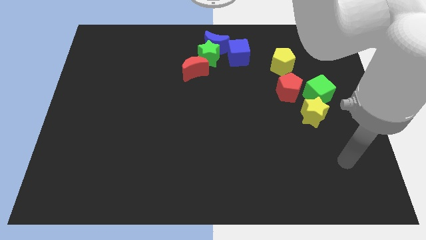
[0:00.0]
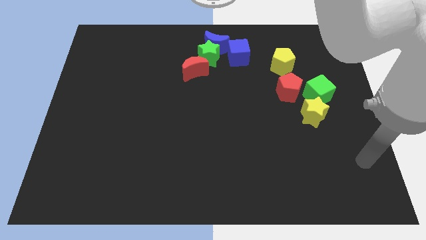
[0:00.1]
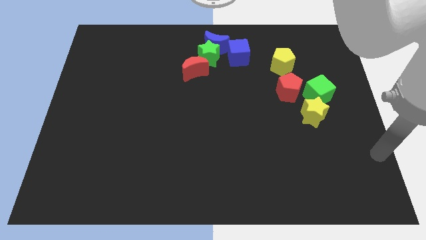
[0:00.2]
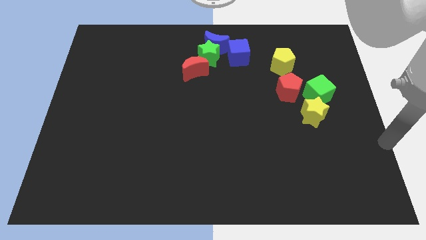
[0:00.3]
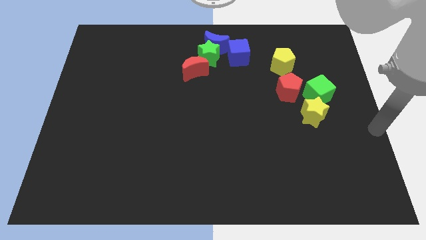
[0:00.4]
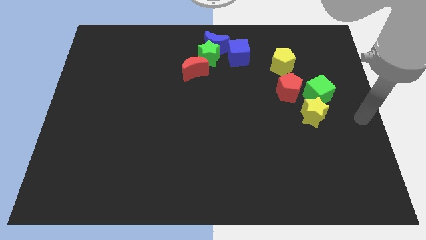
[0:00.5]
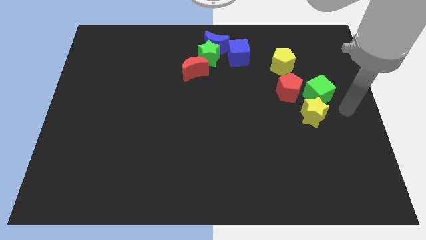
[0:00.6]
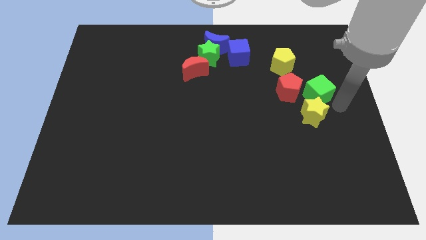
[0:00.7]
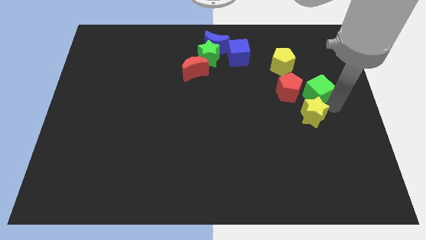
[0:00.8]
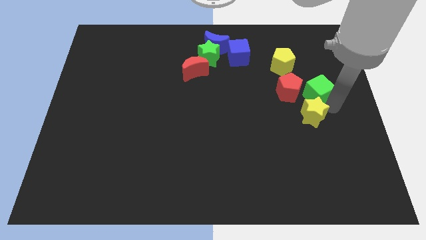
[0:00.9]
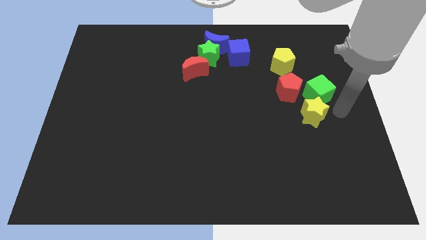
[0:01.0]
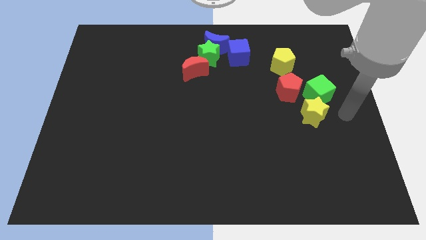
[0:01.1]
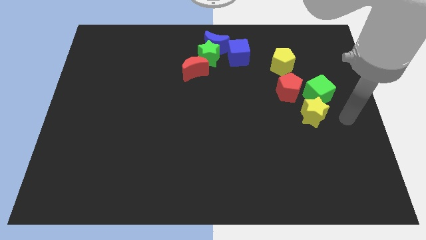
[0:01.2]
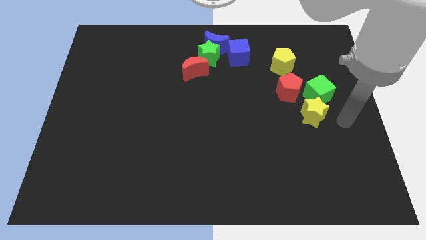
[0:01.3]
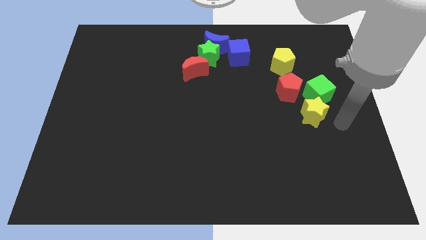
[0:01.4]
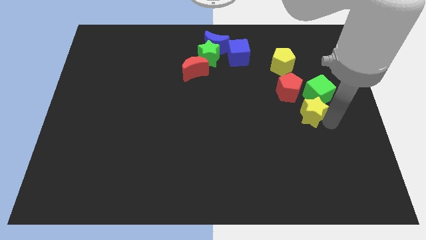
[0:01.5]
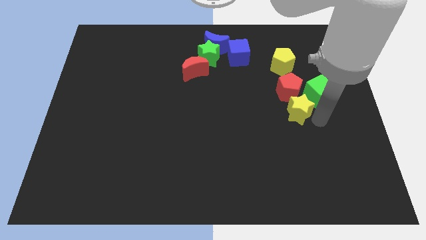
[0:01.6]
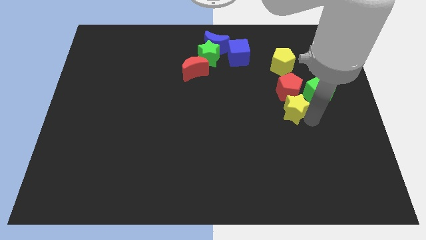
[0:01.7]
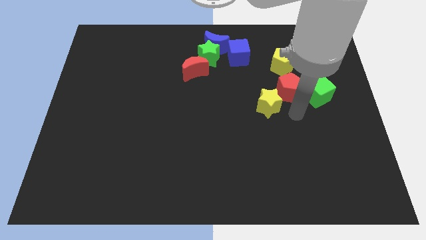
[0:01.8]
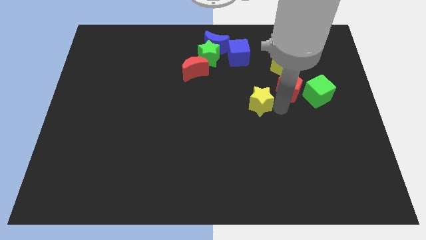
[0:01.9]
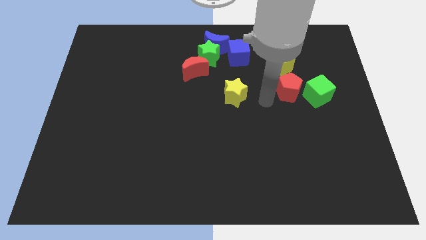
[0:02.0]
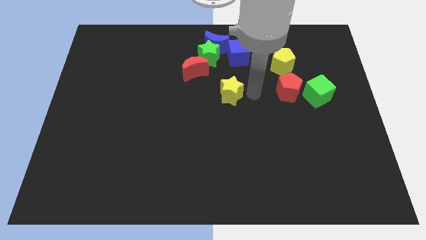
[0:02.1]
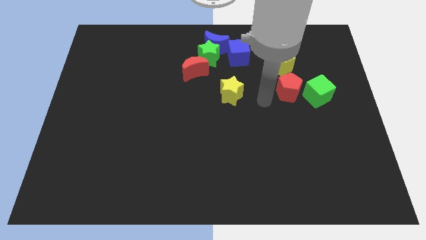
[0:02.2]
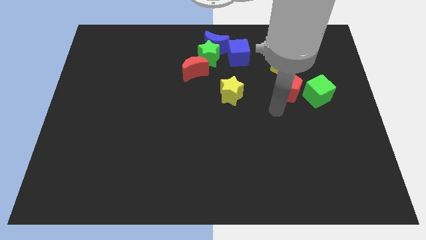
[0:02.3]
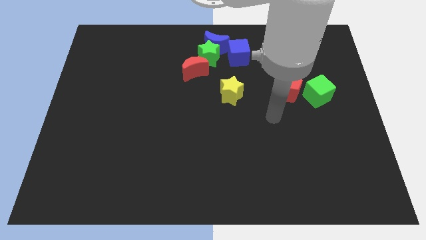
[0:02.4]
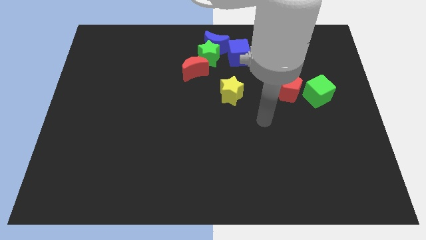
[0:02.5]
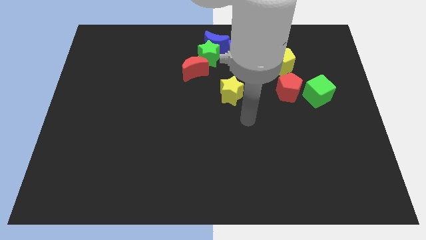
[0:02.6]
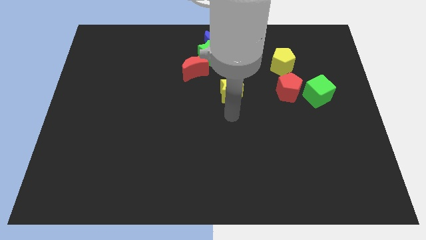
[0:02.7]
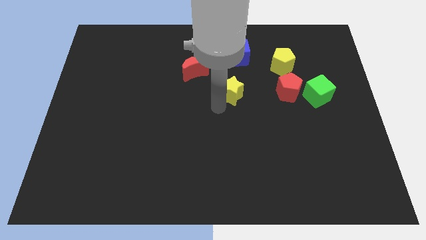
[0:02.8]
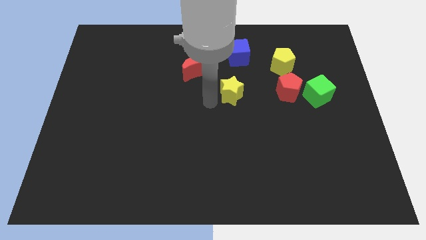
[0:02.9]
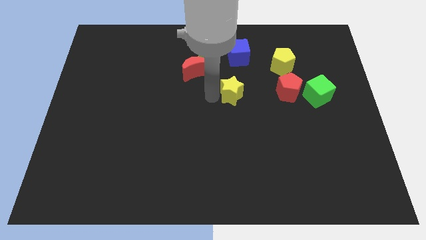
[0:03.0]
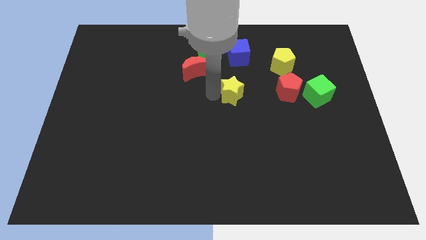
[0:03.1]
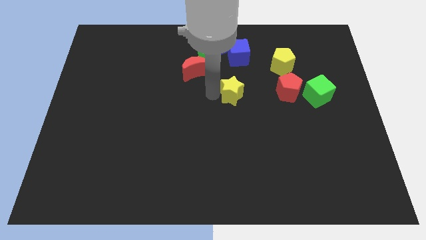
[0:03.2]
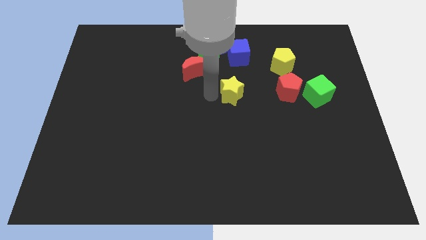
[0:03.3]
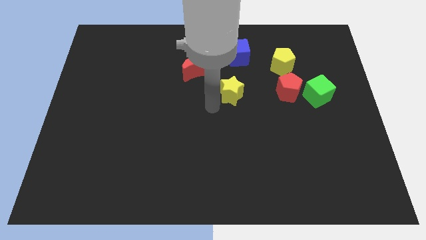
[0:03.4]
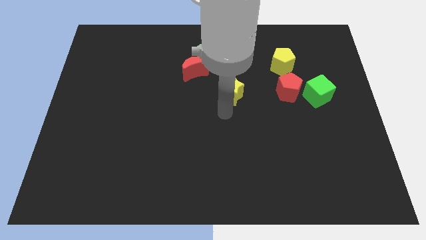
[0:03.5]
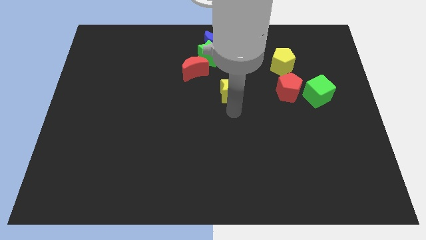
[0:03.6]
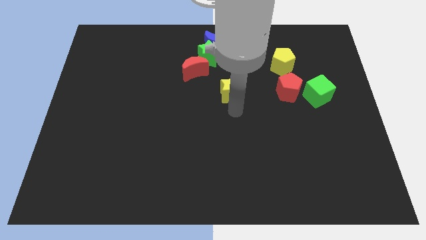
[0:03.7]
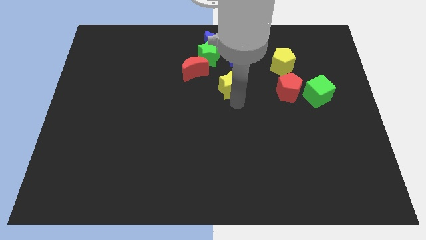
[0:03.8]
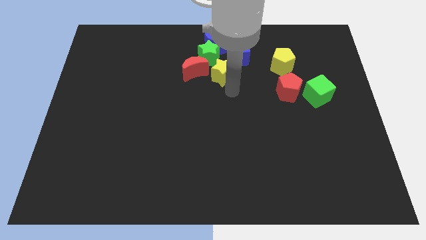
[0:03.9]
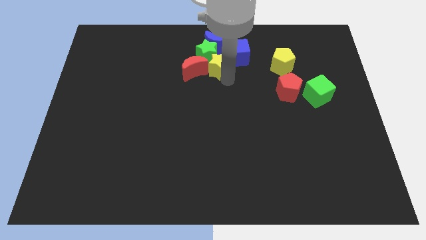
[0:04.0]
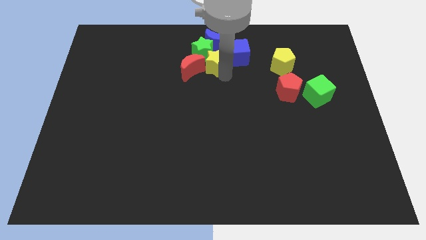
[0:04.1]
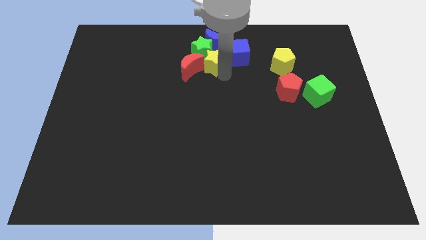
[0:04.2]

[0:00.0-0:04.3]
move the yellow star into the group of blocks

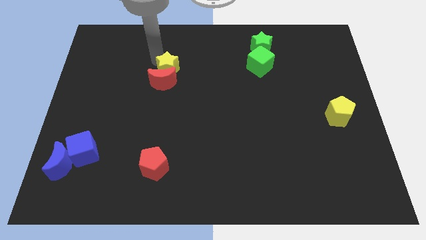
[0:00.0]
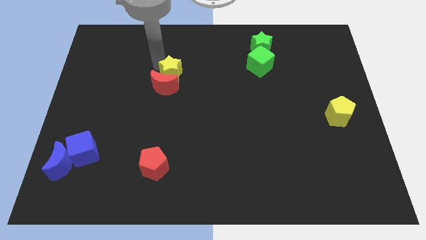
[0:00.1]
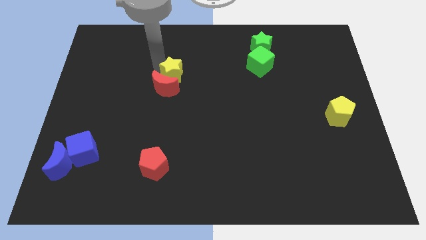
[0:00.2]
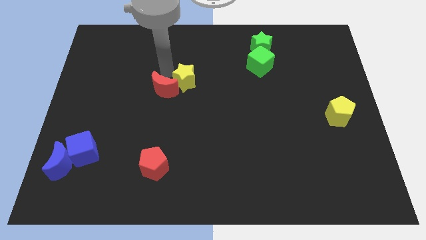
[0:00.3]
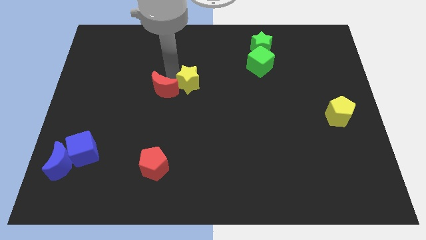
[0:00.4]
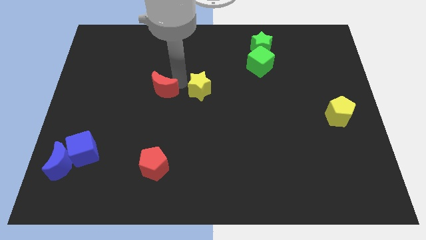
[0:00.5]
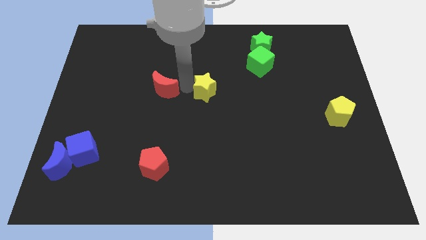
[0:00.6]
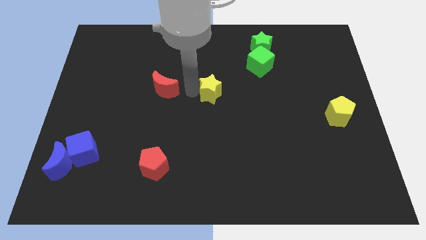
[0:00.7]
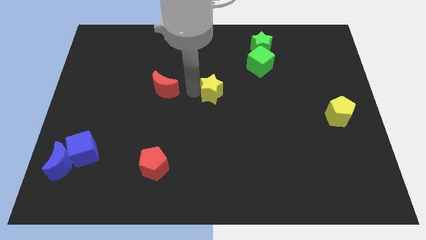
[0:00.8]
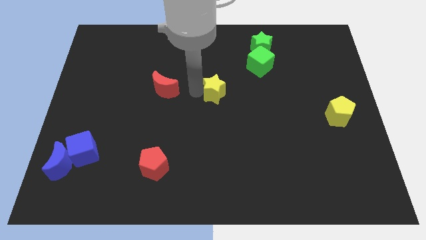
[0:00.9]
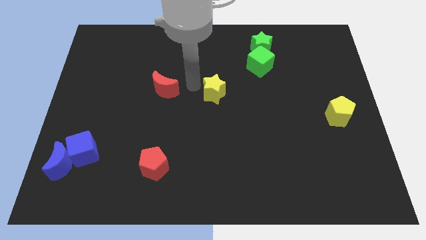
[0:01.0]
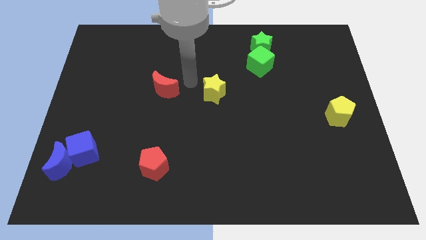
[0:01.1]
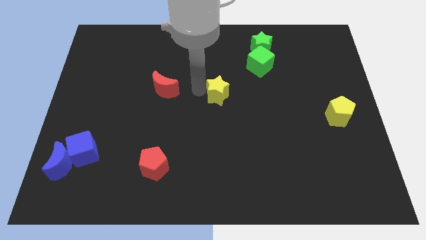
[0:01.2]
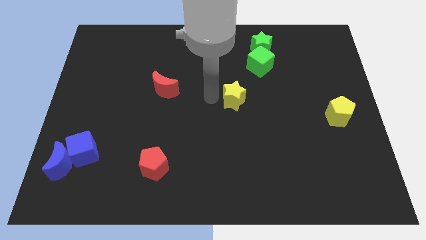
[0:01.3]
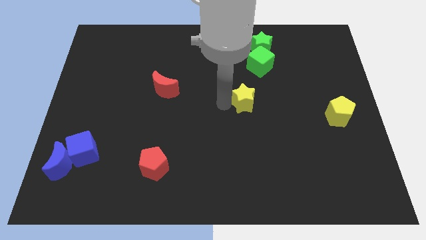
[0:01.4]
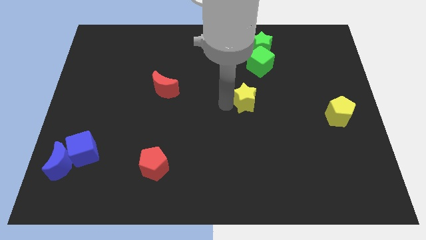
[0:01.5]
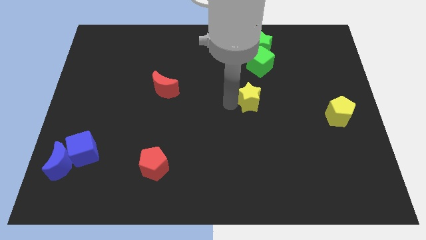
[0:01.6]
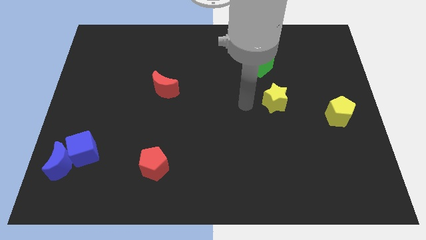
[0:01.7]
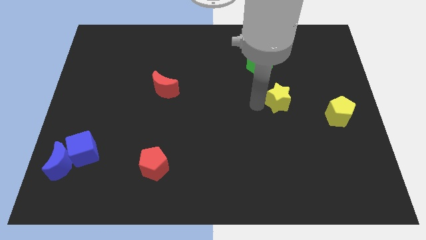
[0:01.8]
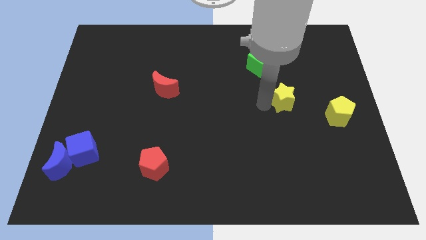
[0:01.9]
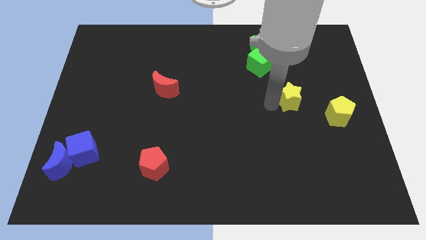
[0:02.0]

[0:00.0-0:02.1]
separate yellow star from red moon

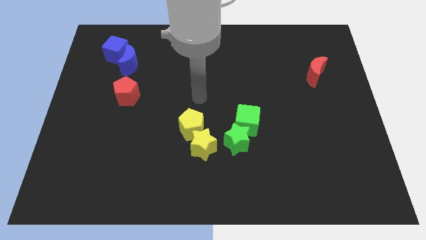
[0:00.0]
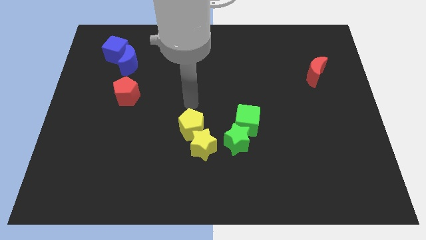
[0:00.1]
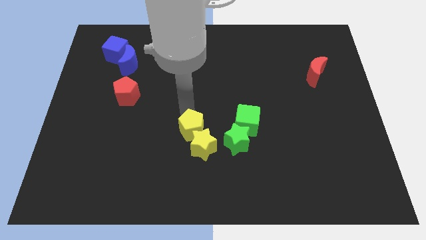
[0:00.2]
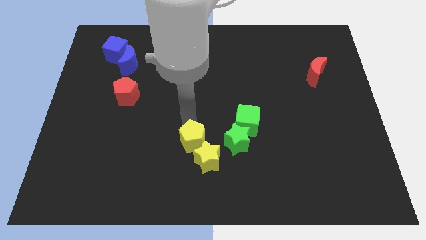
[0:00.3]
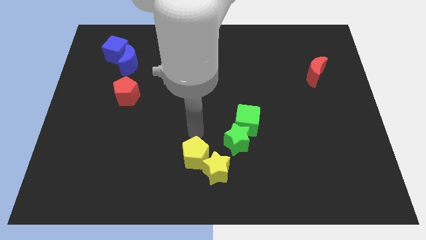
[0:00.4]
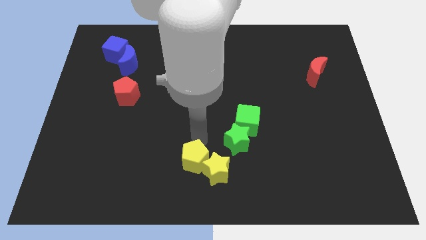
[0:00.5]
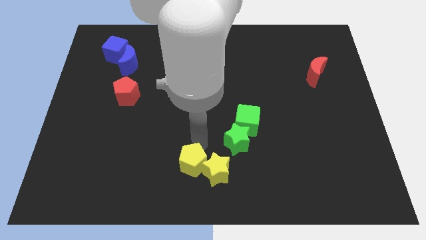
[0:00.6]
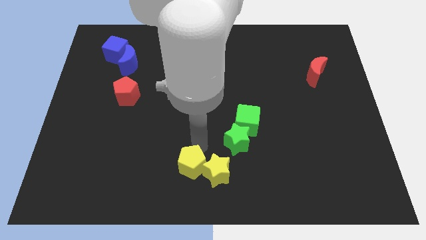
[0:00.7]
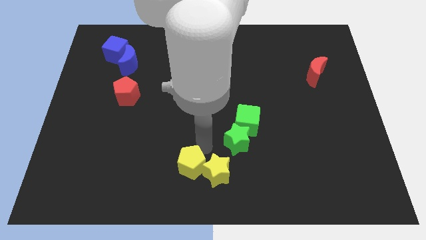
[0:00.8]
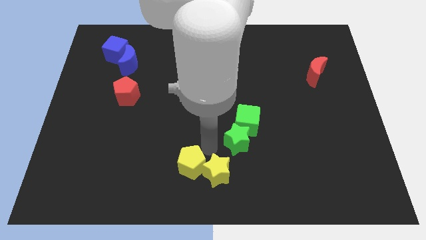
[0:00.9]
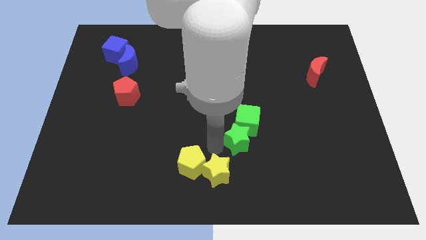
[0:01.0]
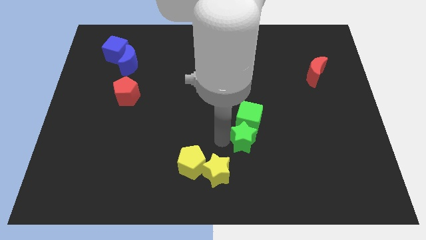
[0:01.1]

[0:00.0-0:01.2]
move the yellow star with the yellow pentagon towards the bottom center of the board

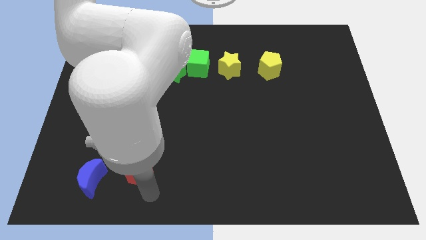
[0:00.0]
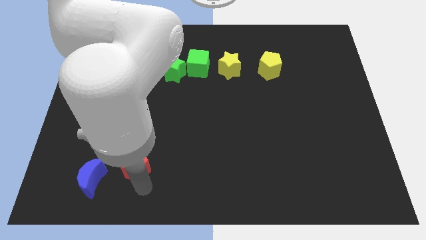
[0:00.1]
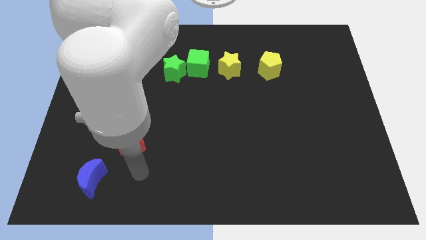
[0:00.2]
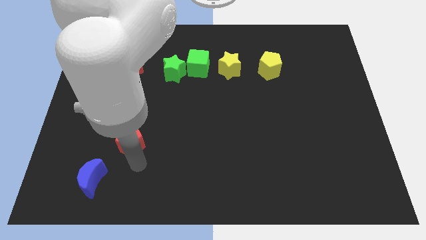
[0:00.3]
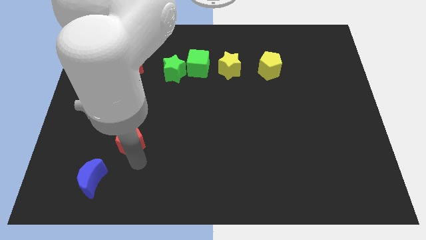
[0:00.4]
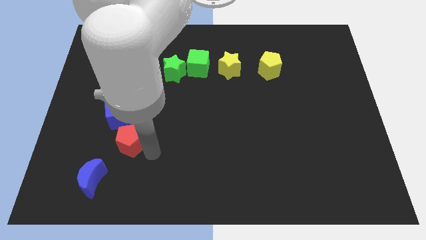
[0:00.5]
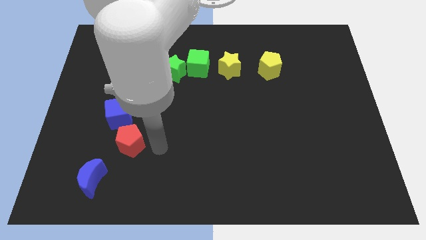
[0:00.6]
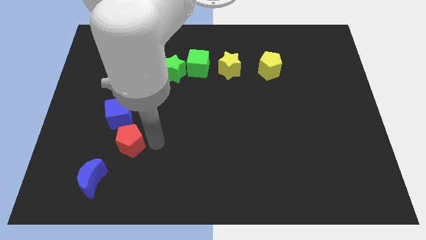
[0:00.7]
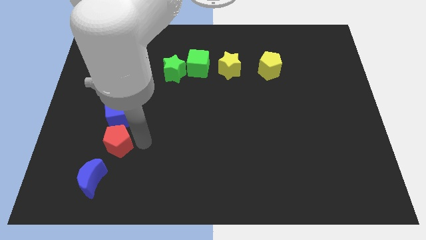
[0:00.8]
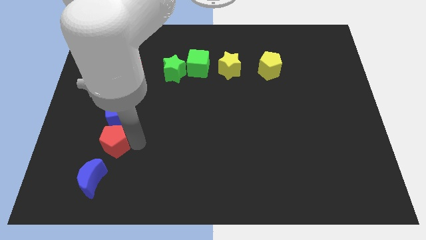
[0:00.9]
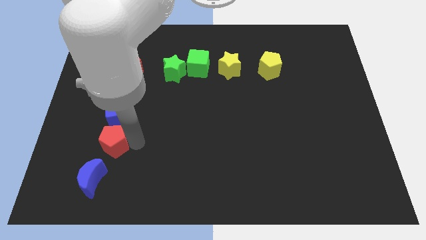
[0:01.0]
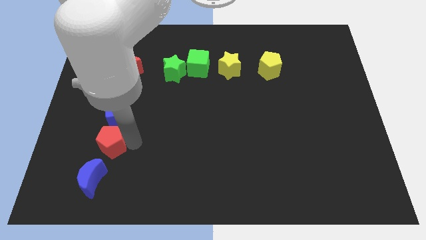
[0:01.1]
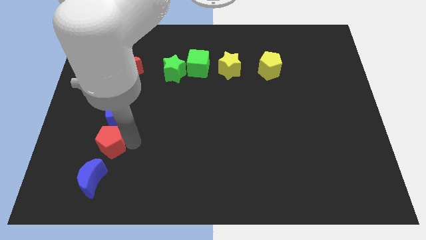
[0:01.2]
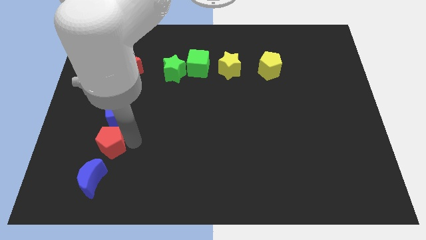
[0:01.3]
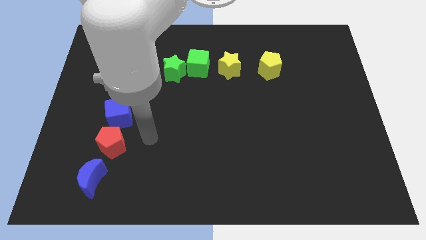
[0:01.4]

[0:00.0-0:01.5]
move the red pentagon below the blue cube
